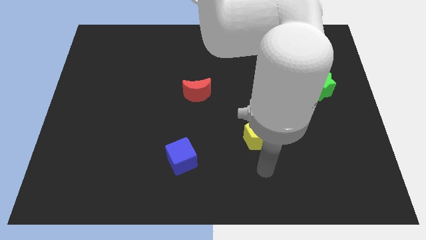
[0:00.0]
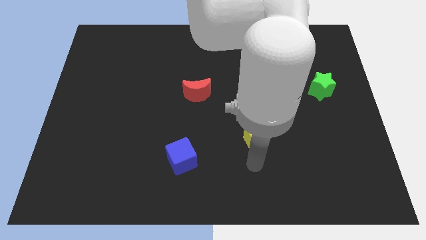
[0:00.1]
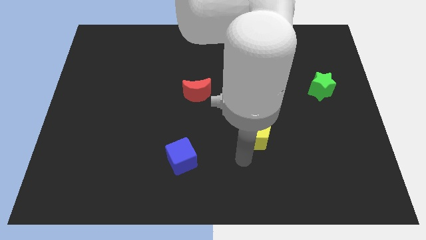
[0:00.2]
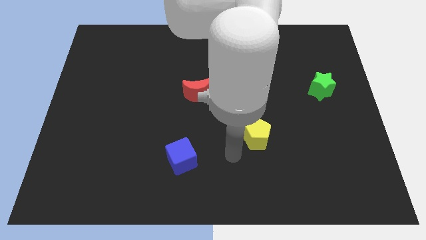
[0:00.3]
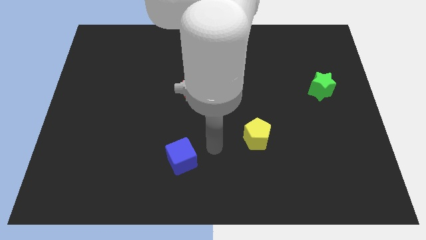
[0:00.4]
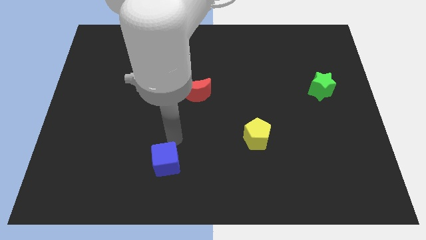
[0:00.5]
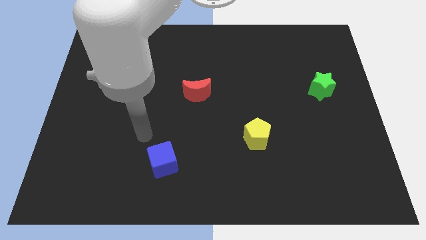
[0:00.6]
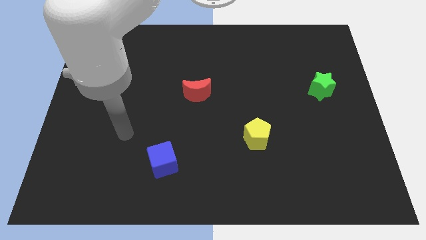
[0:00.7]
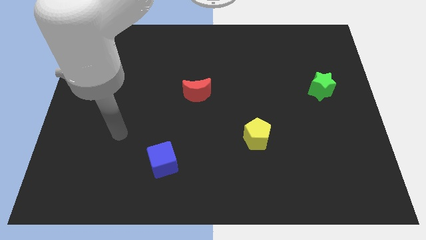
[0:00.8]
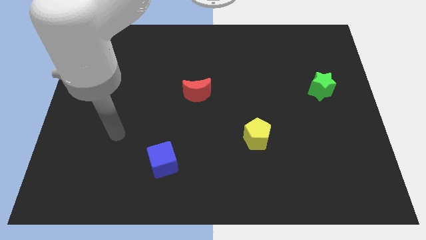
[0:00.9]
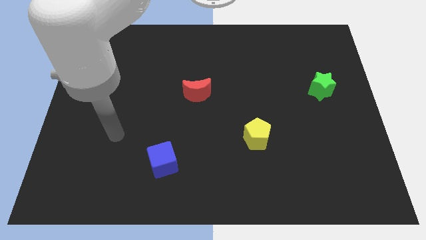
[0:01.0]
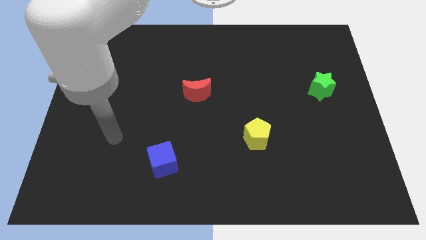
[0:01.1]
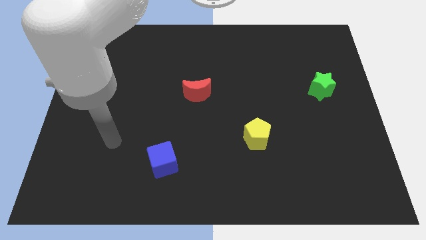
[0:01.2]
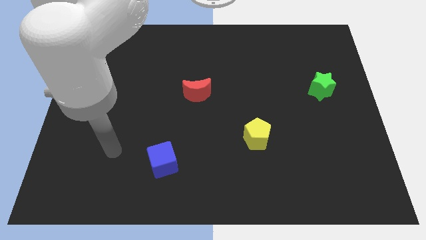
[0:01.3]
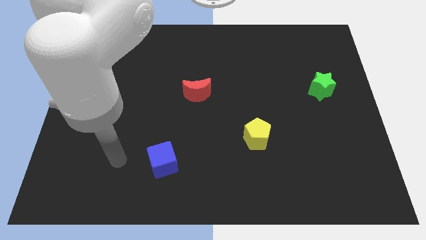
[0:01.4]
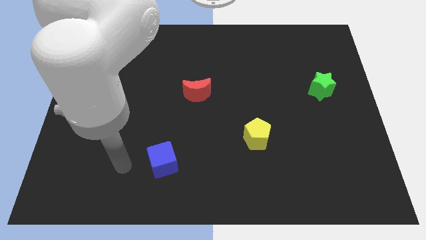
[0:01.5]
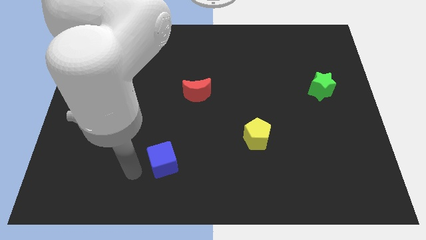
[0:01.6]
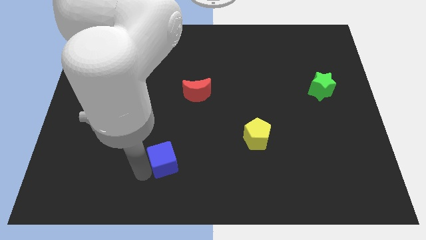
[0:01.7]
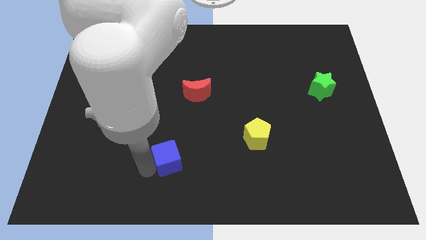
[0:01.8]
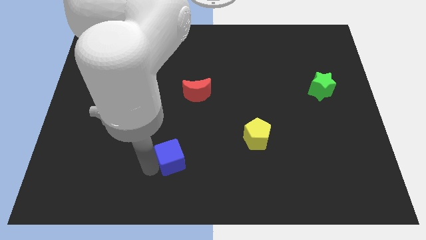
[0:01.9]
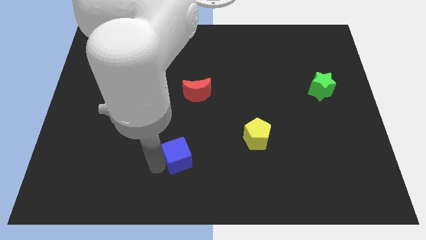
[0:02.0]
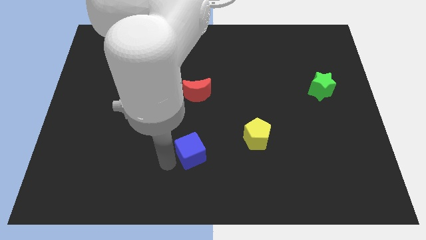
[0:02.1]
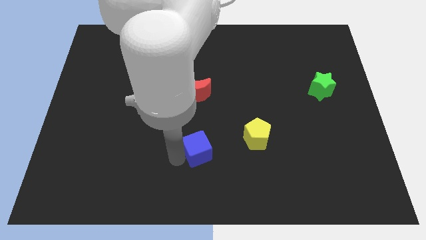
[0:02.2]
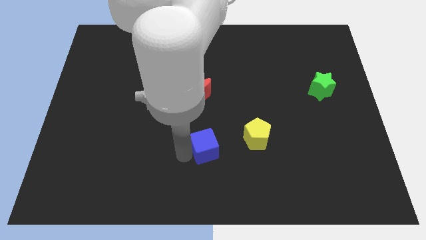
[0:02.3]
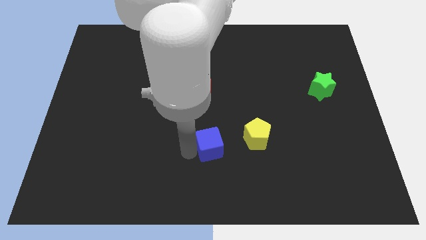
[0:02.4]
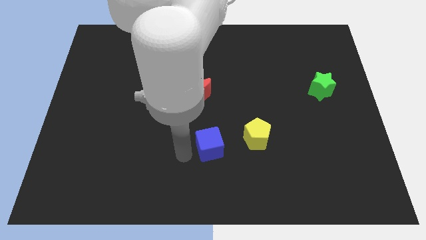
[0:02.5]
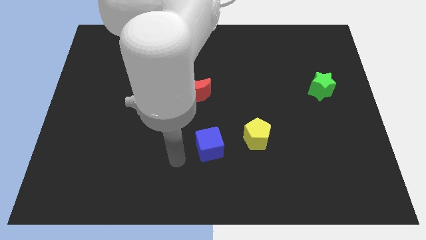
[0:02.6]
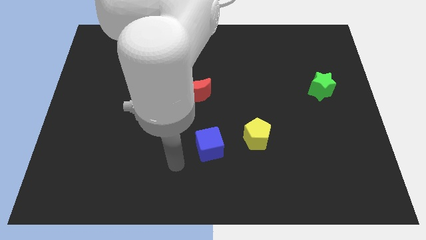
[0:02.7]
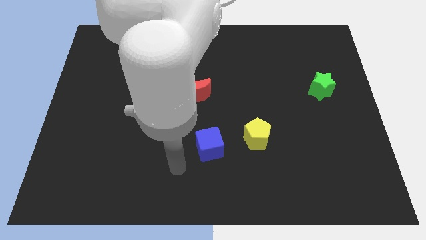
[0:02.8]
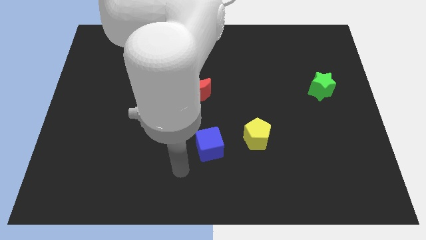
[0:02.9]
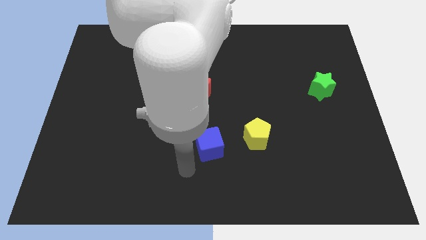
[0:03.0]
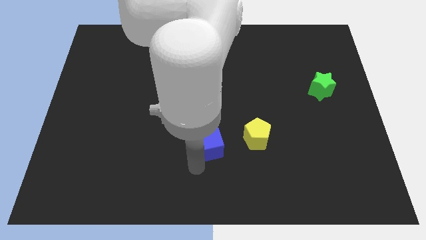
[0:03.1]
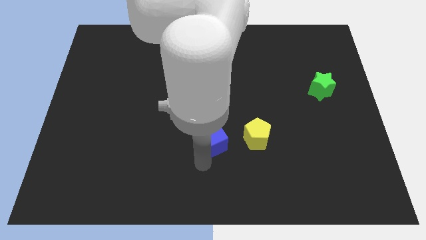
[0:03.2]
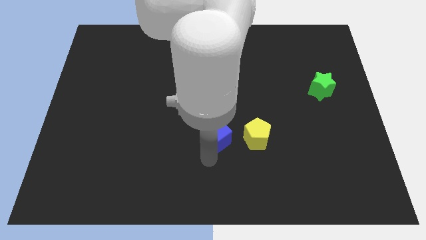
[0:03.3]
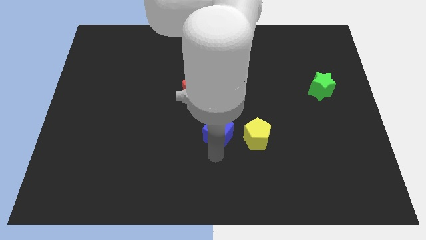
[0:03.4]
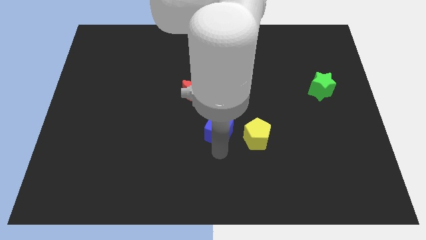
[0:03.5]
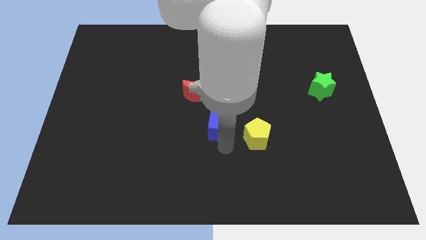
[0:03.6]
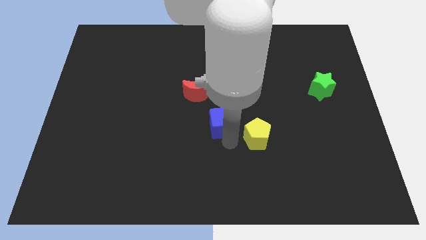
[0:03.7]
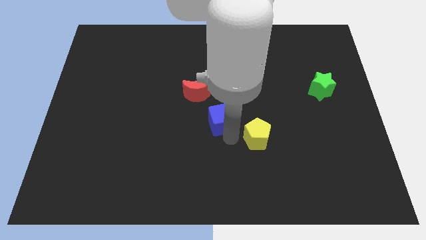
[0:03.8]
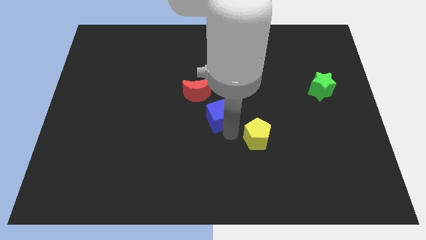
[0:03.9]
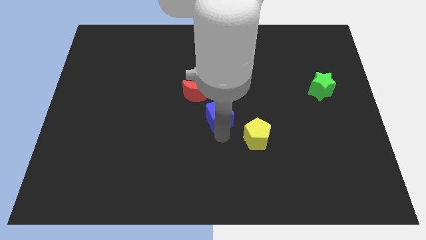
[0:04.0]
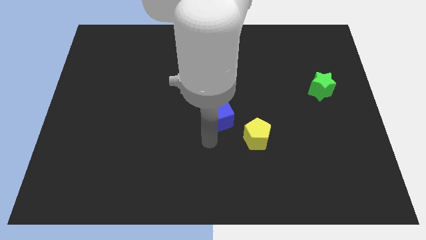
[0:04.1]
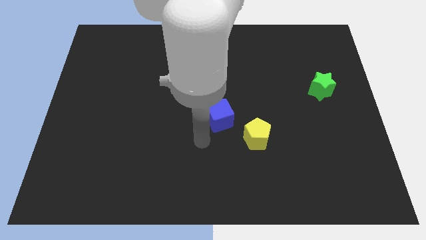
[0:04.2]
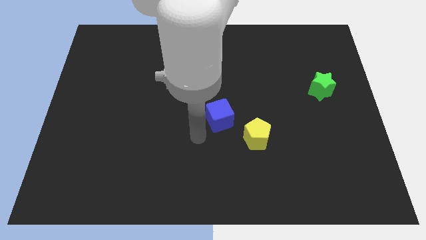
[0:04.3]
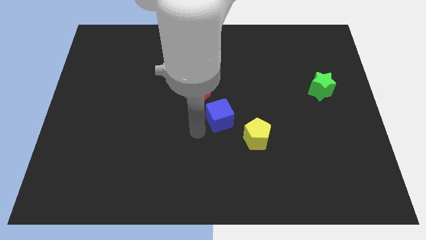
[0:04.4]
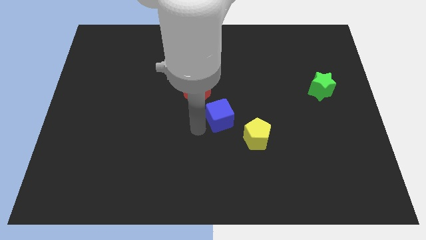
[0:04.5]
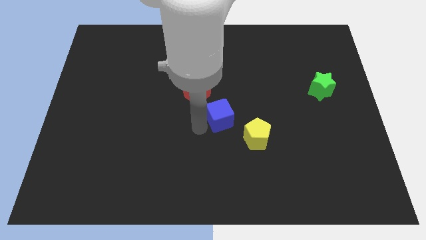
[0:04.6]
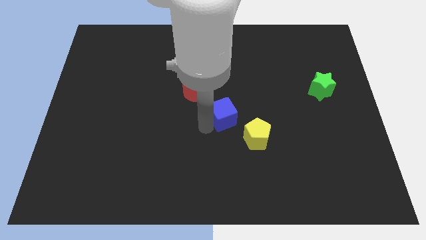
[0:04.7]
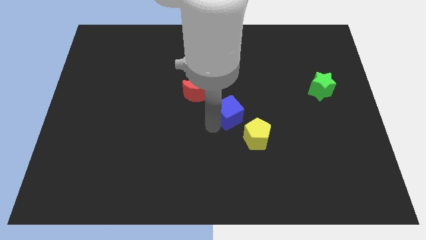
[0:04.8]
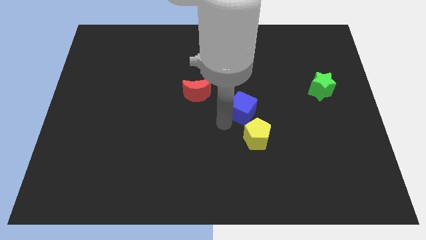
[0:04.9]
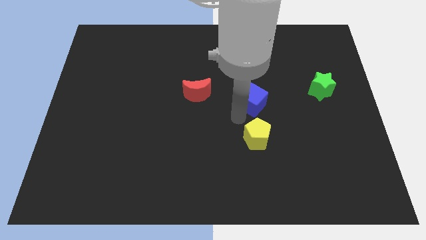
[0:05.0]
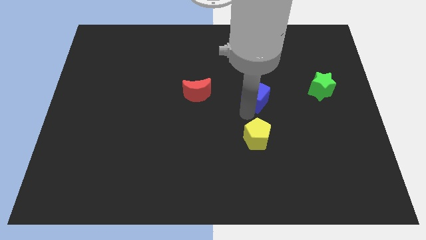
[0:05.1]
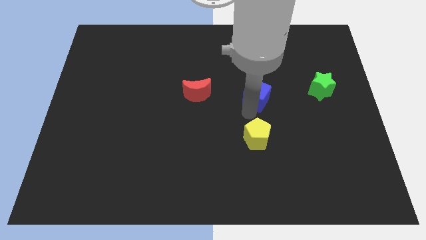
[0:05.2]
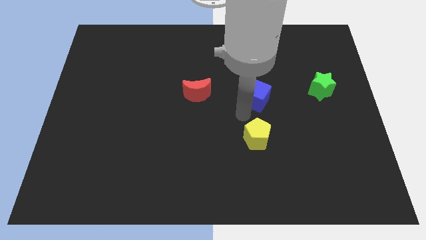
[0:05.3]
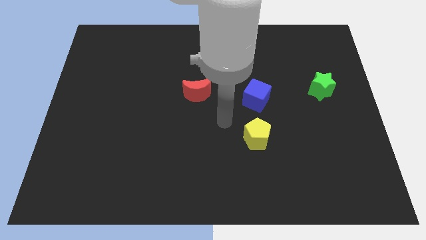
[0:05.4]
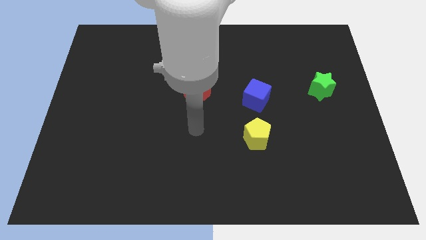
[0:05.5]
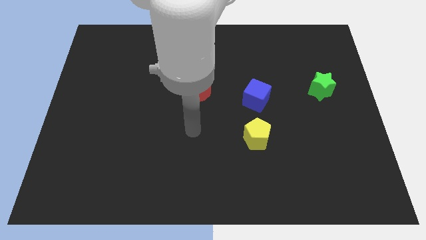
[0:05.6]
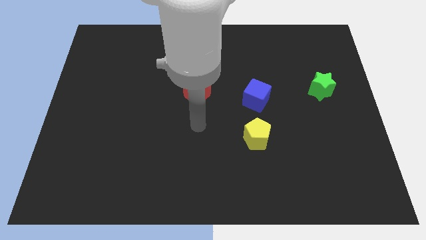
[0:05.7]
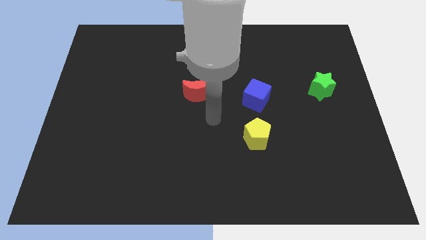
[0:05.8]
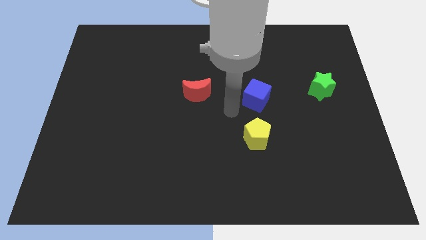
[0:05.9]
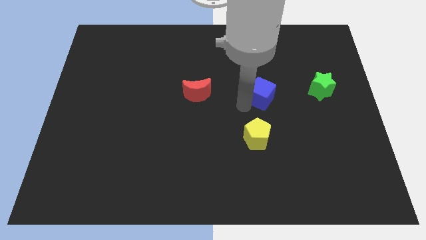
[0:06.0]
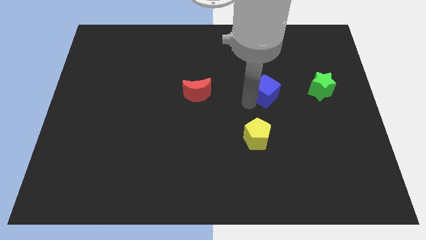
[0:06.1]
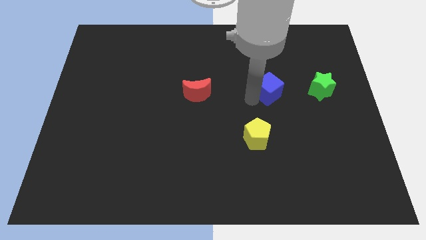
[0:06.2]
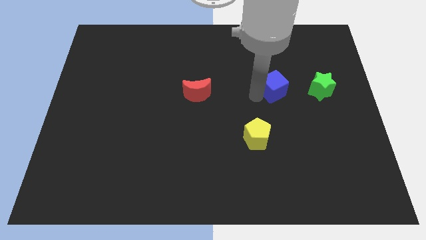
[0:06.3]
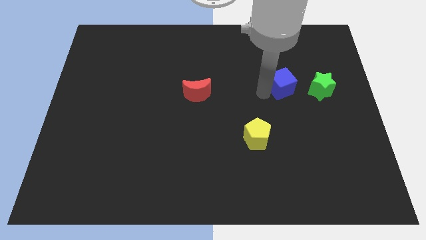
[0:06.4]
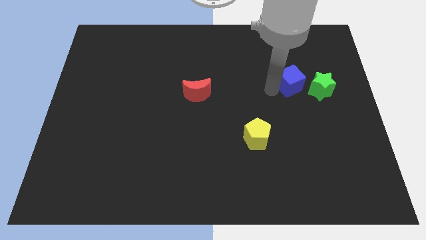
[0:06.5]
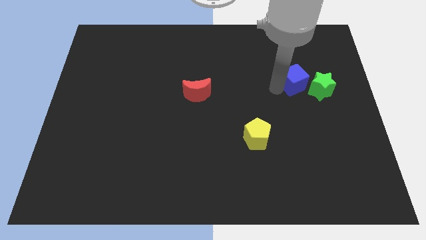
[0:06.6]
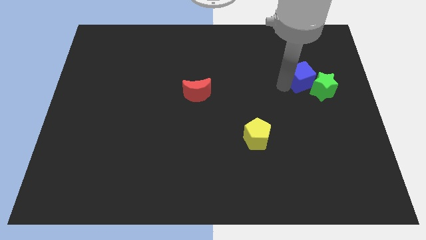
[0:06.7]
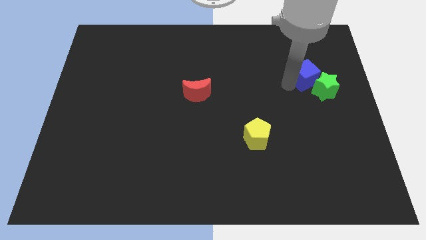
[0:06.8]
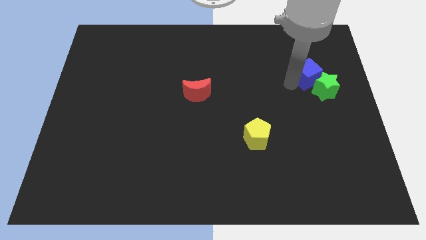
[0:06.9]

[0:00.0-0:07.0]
slide the blue cube to the green block

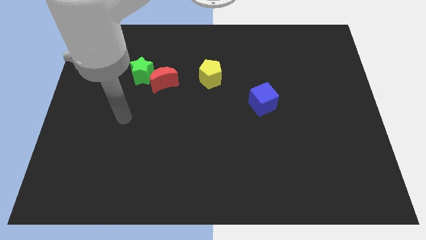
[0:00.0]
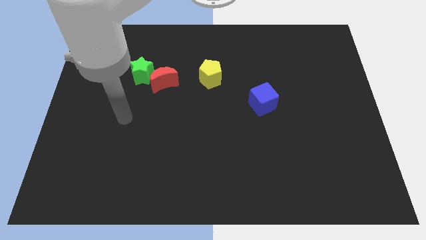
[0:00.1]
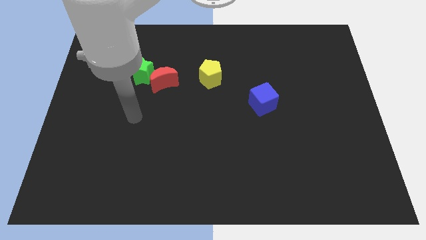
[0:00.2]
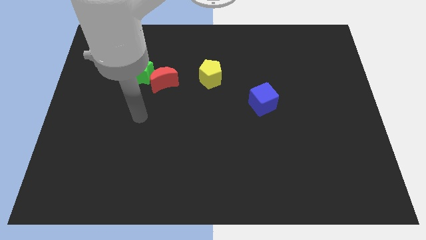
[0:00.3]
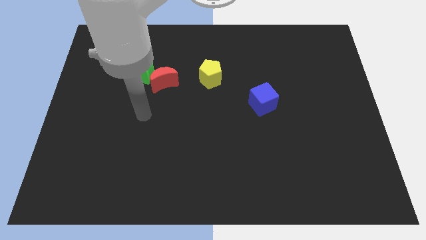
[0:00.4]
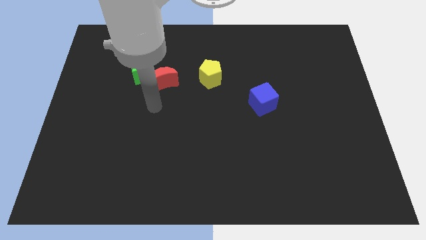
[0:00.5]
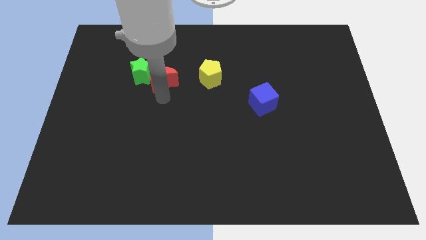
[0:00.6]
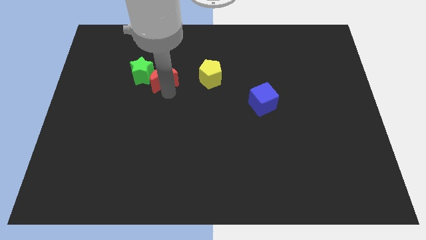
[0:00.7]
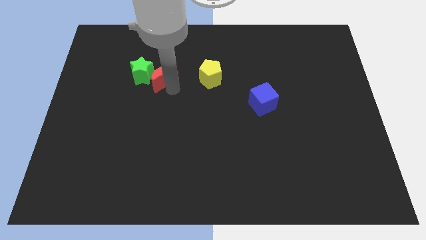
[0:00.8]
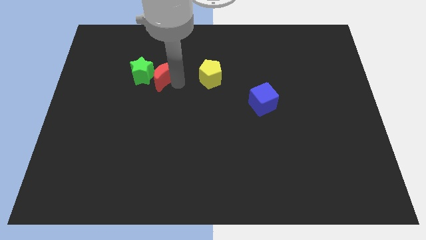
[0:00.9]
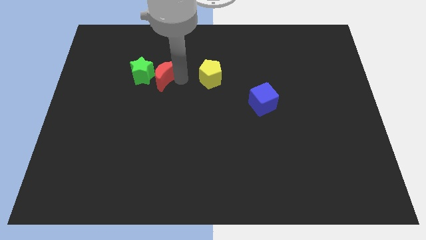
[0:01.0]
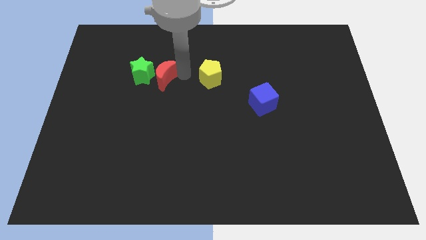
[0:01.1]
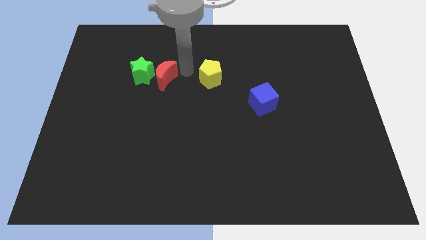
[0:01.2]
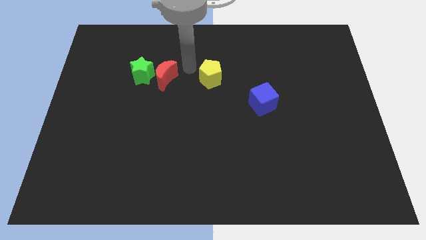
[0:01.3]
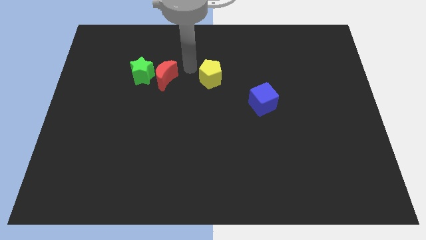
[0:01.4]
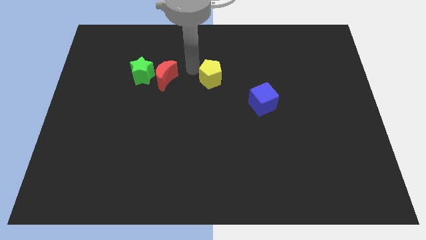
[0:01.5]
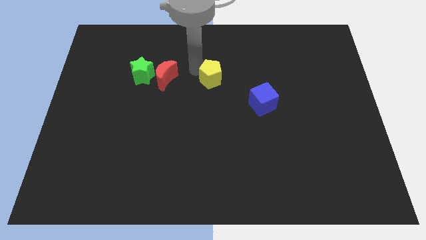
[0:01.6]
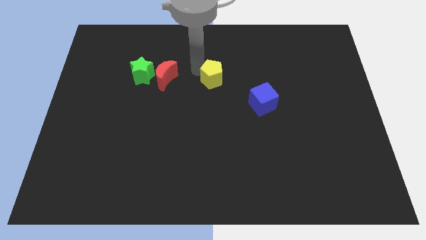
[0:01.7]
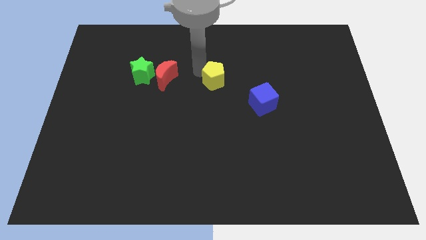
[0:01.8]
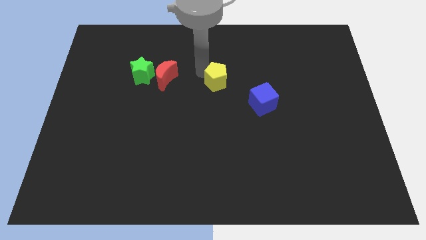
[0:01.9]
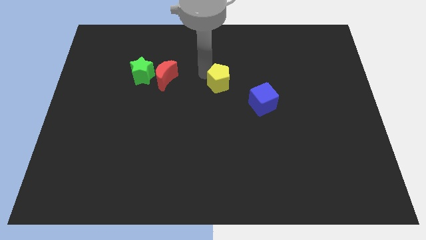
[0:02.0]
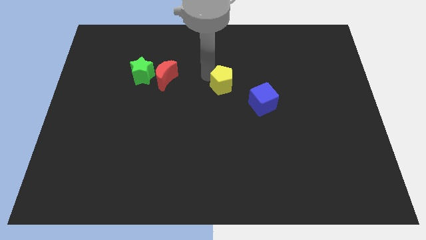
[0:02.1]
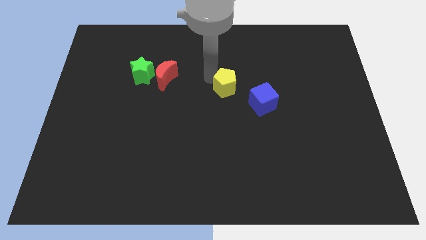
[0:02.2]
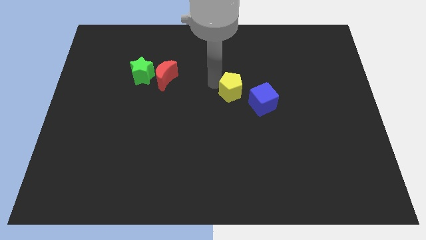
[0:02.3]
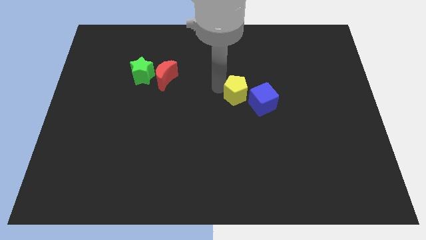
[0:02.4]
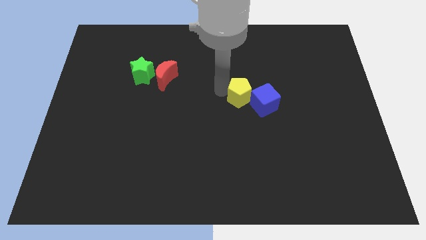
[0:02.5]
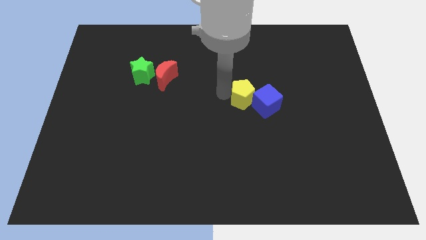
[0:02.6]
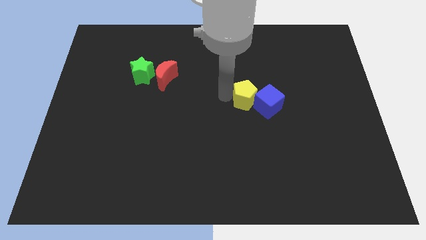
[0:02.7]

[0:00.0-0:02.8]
push the yellow block next to the blue block
